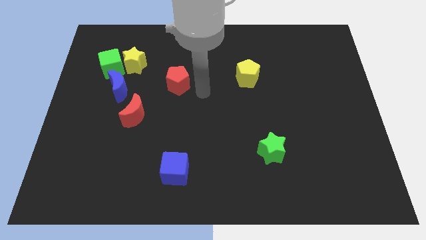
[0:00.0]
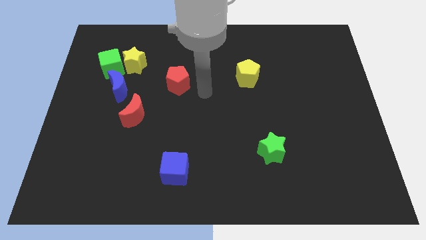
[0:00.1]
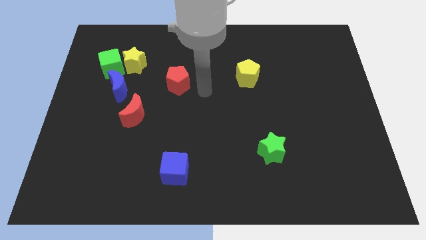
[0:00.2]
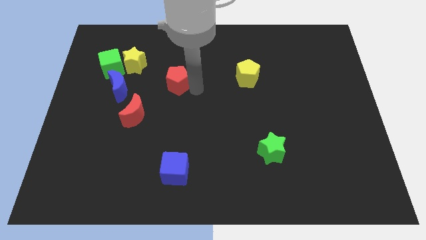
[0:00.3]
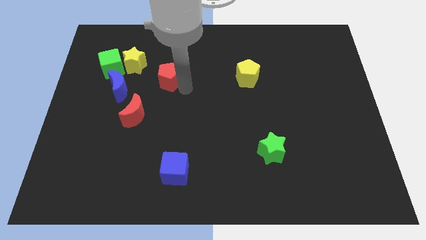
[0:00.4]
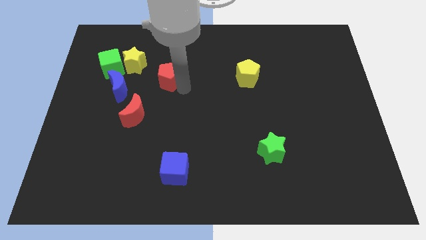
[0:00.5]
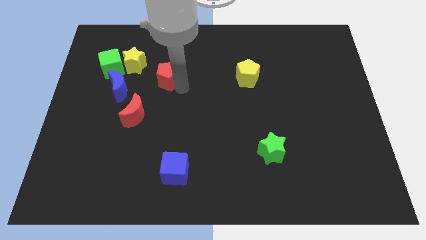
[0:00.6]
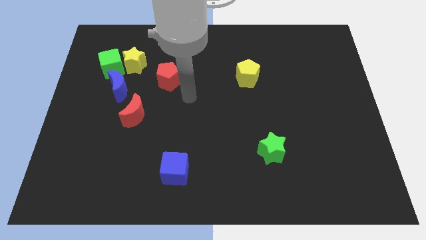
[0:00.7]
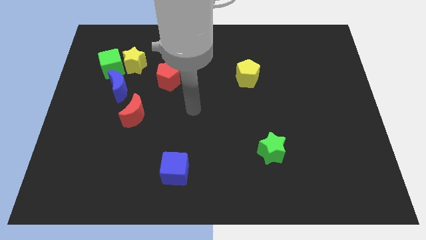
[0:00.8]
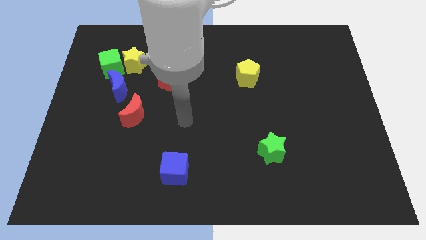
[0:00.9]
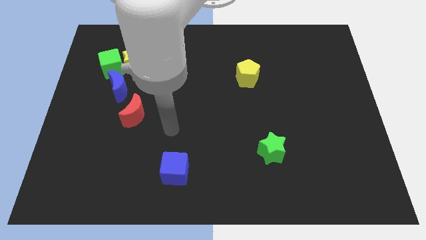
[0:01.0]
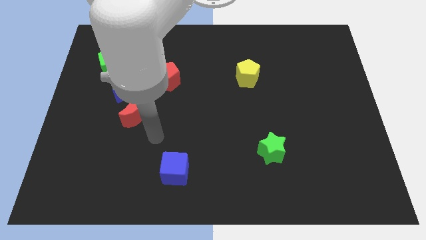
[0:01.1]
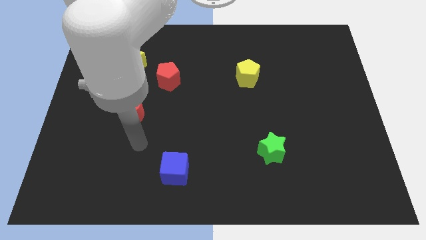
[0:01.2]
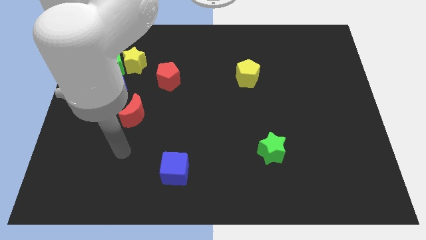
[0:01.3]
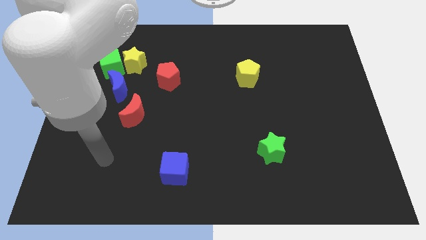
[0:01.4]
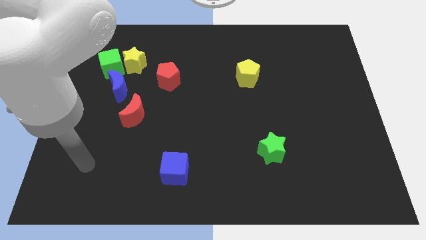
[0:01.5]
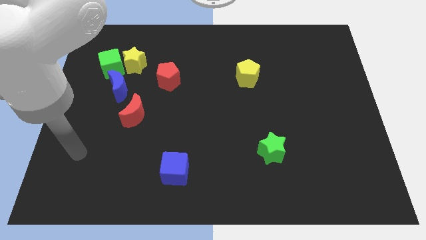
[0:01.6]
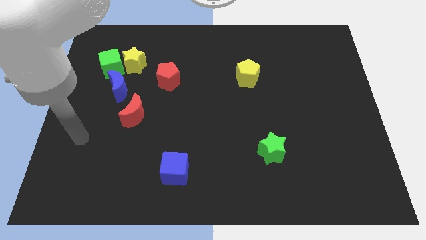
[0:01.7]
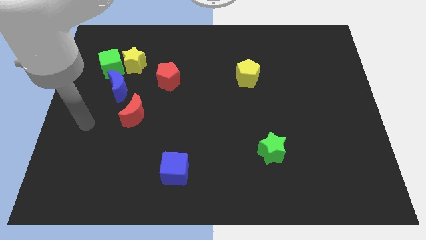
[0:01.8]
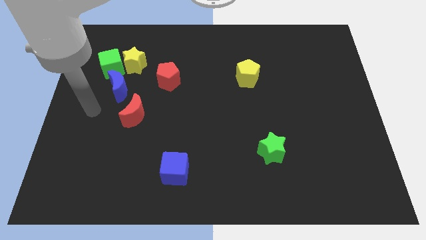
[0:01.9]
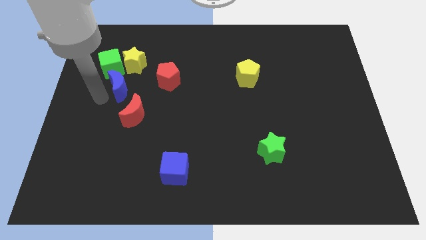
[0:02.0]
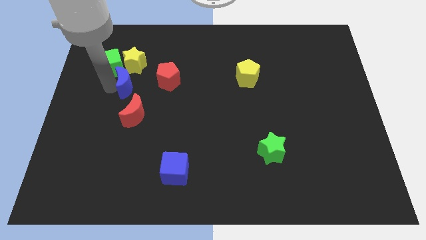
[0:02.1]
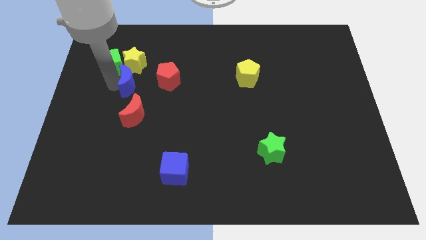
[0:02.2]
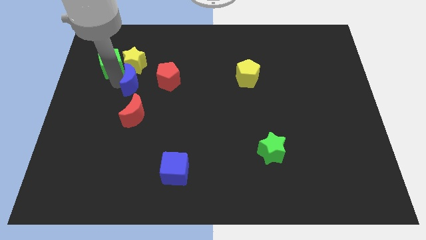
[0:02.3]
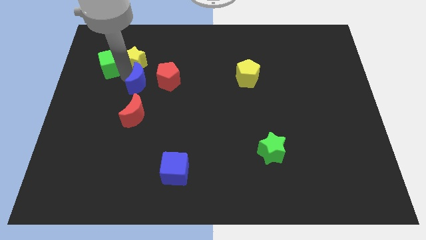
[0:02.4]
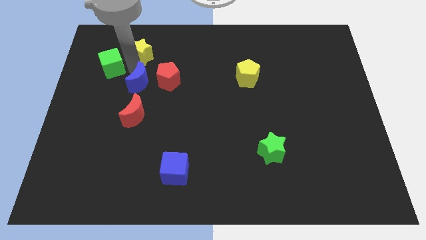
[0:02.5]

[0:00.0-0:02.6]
place blue crescent near red crescent and pentagon

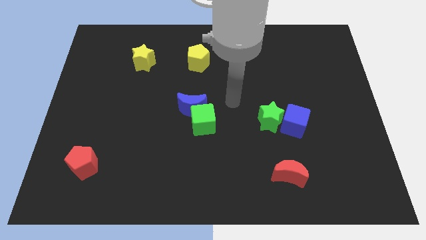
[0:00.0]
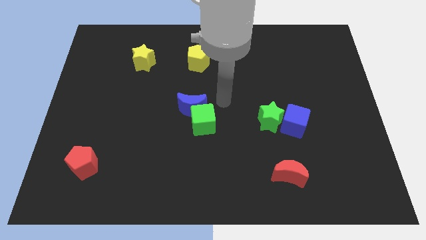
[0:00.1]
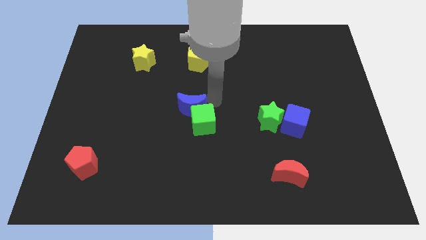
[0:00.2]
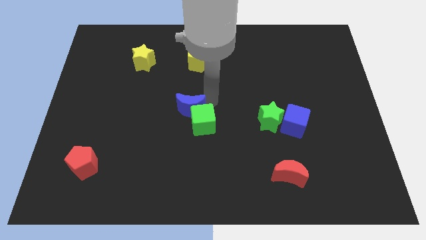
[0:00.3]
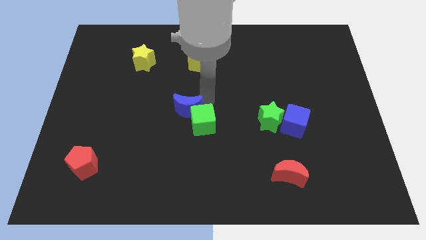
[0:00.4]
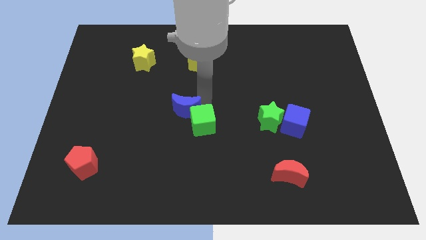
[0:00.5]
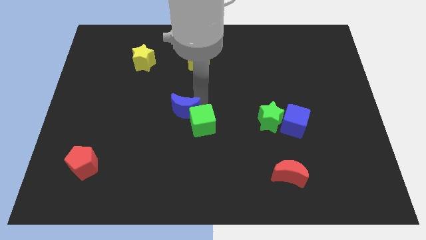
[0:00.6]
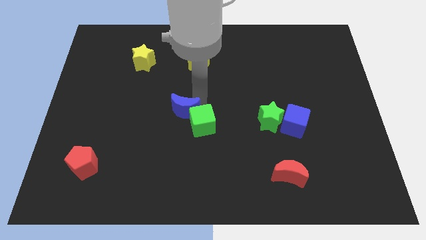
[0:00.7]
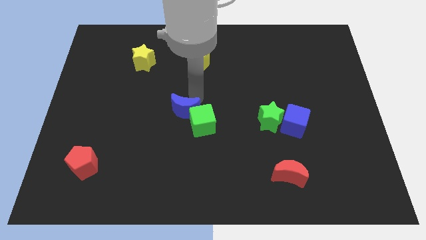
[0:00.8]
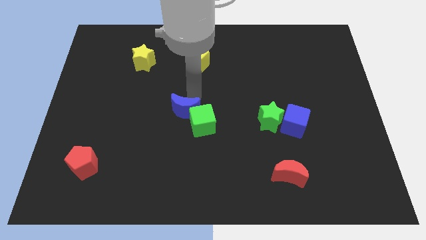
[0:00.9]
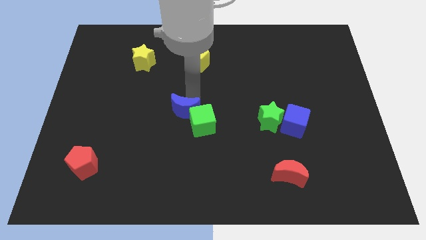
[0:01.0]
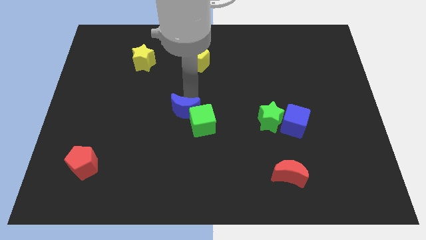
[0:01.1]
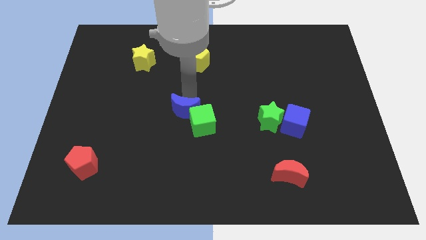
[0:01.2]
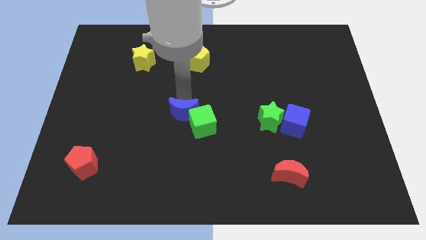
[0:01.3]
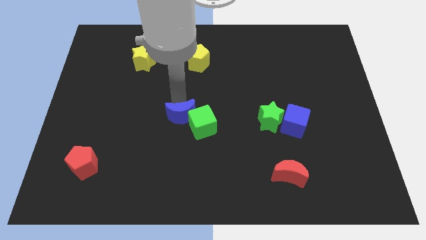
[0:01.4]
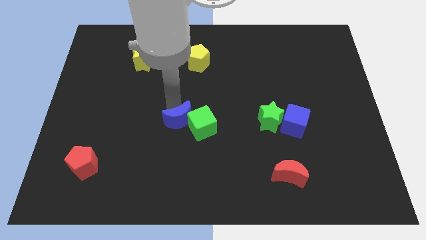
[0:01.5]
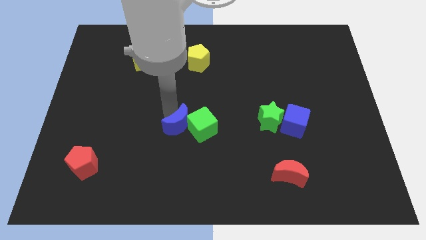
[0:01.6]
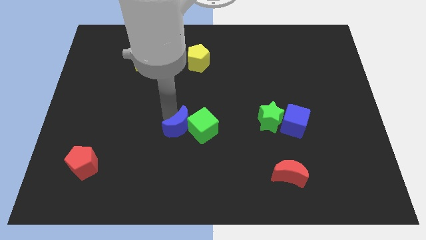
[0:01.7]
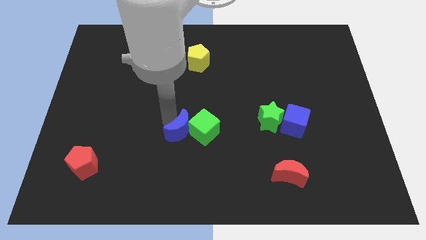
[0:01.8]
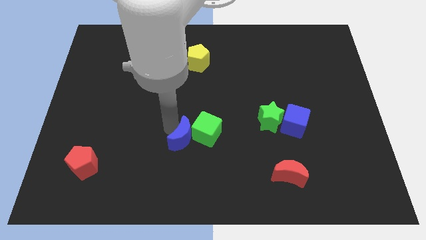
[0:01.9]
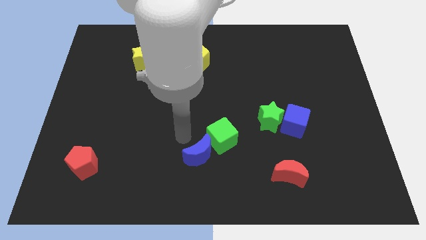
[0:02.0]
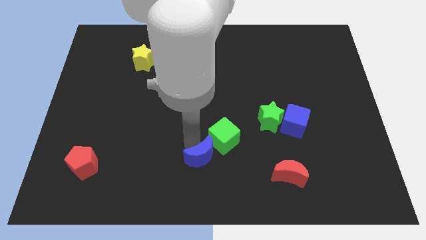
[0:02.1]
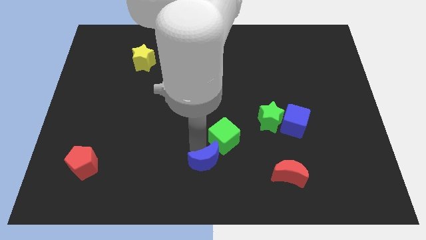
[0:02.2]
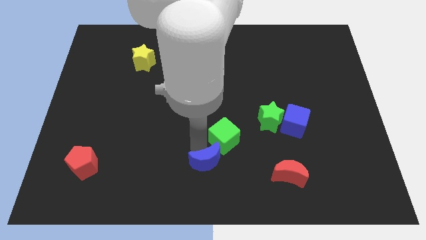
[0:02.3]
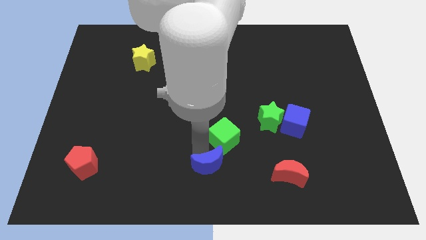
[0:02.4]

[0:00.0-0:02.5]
push the blue moon into the green cube

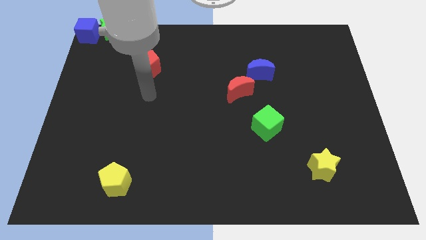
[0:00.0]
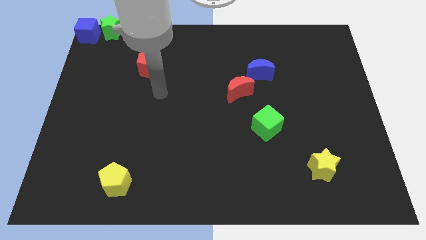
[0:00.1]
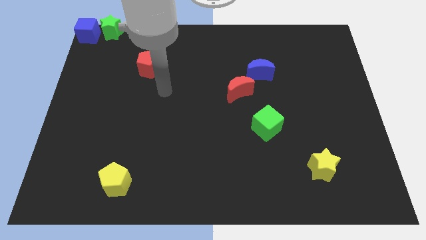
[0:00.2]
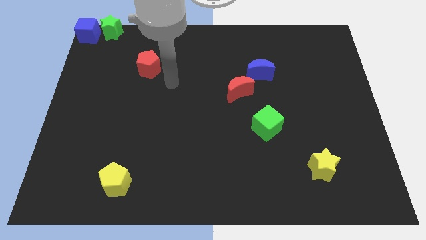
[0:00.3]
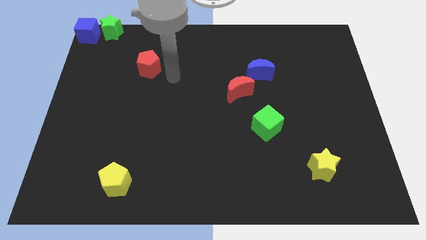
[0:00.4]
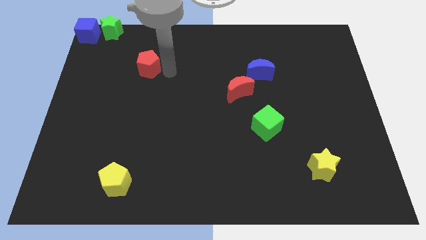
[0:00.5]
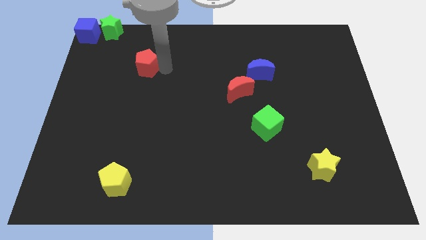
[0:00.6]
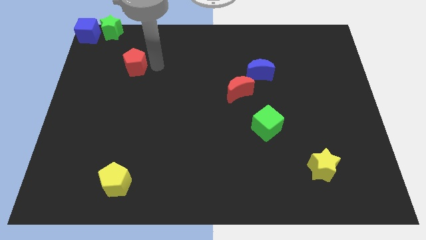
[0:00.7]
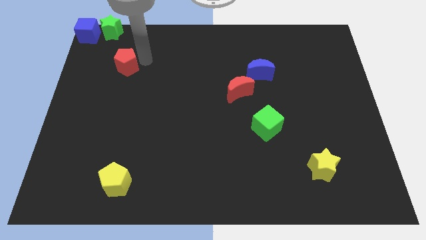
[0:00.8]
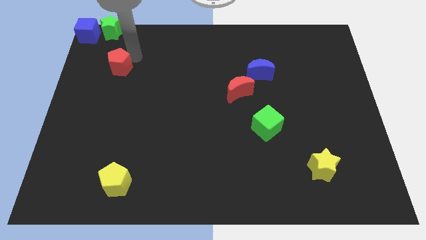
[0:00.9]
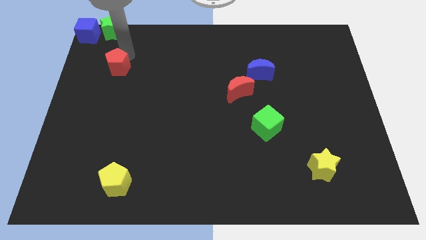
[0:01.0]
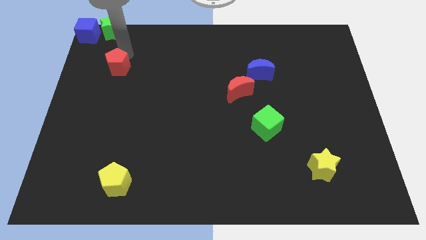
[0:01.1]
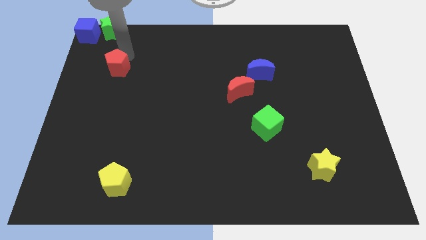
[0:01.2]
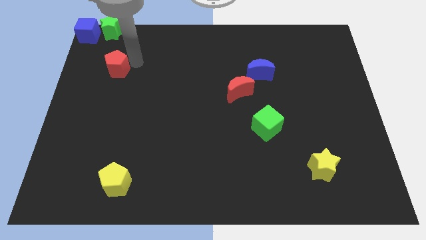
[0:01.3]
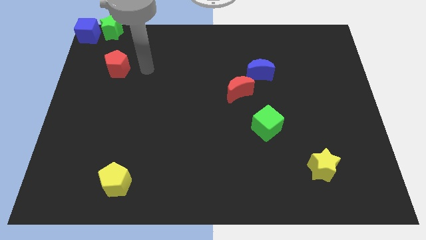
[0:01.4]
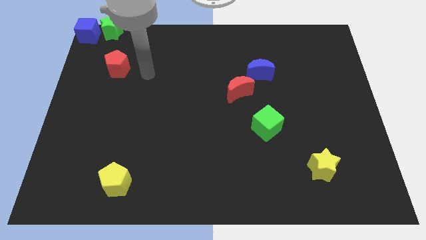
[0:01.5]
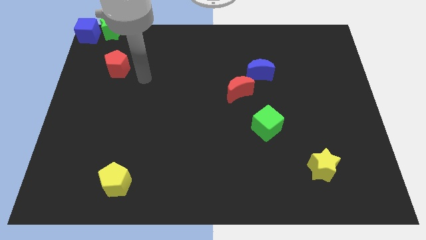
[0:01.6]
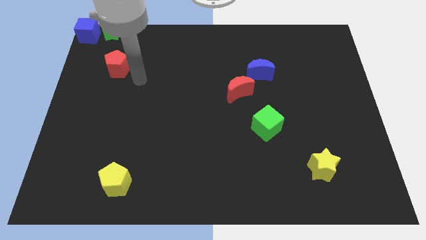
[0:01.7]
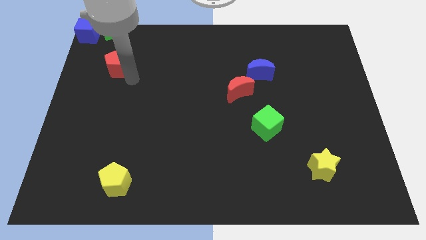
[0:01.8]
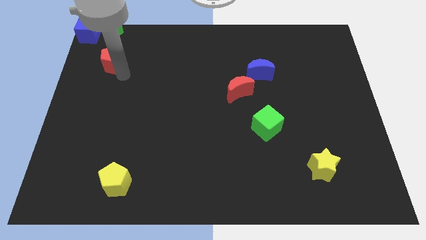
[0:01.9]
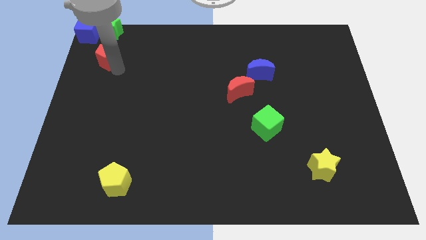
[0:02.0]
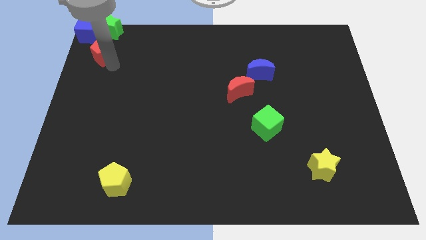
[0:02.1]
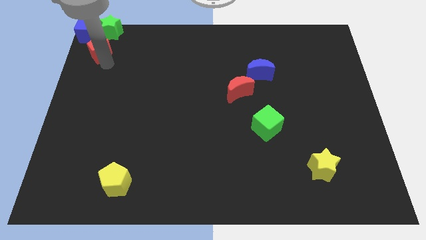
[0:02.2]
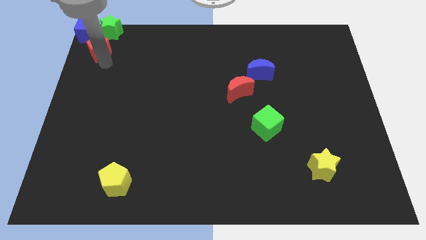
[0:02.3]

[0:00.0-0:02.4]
move the red pentagon to the bottom side of the blue cube and green star

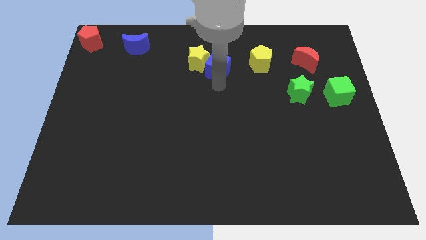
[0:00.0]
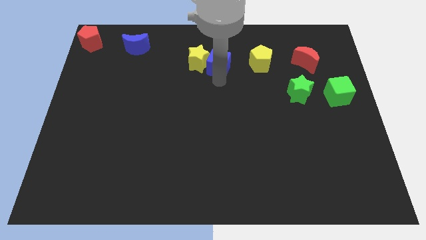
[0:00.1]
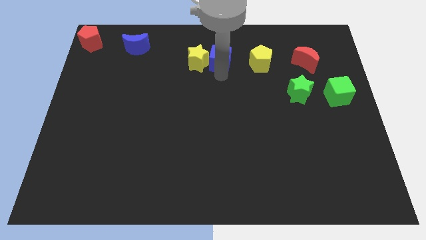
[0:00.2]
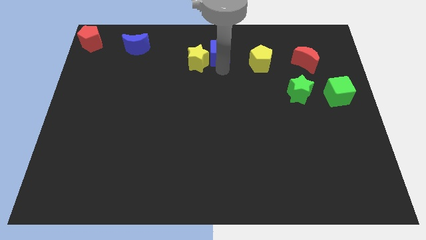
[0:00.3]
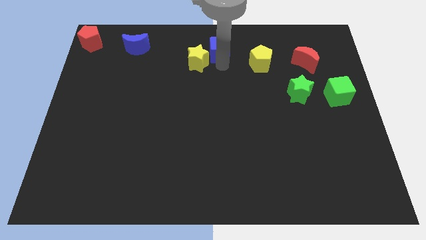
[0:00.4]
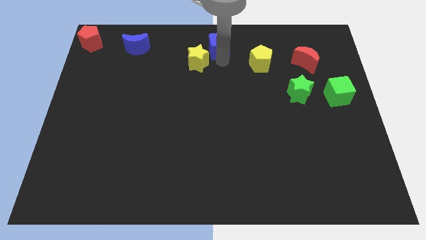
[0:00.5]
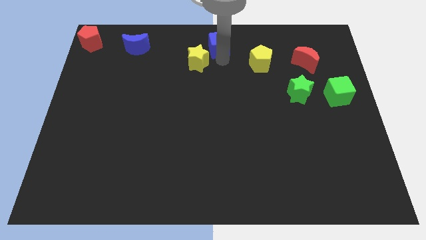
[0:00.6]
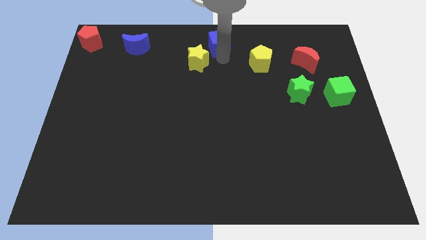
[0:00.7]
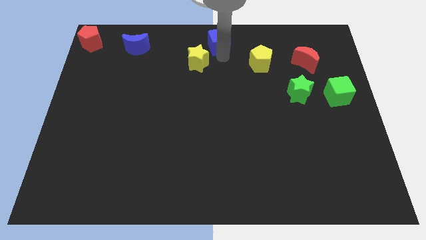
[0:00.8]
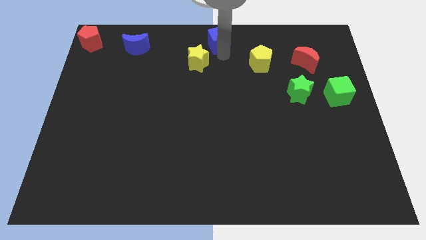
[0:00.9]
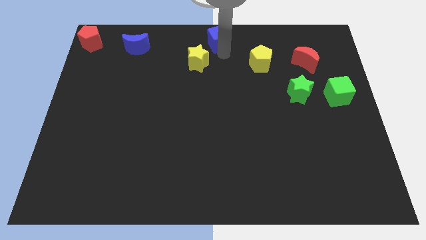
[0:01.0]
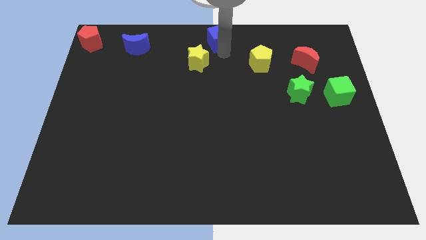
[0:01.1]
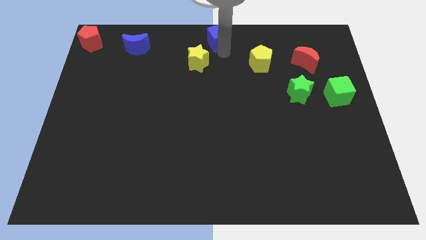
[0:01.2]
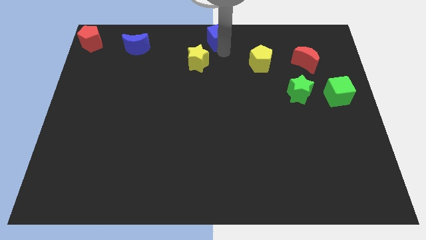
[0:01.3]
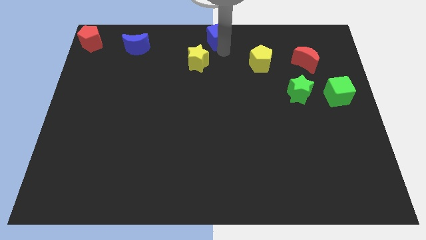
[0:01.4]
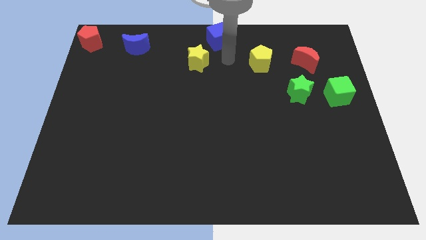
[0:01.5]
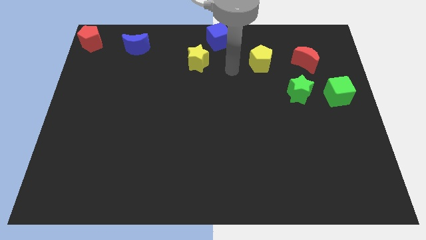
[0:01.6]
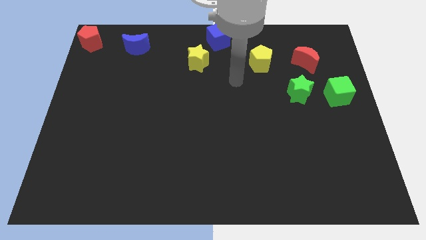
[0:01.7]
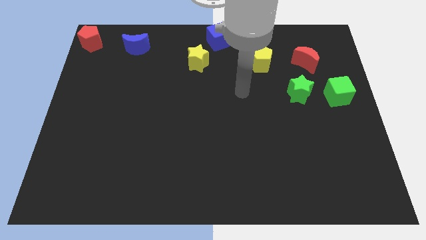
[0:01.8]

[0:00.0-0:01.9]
push blue cube to the top center
